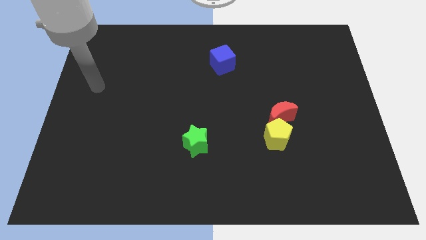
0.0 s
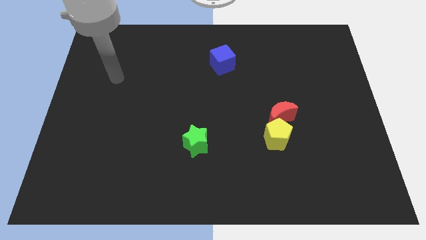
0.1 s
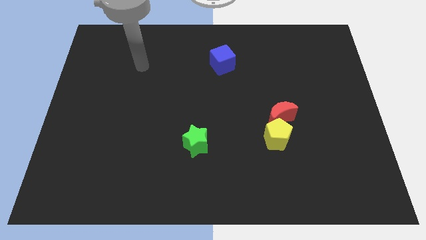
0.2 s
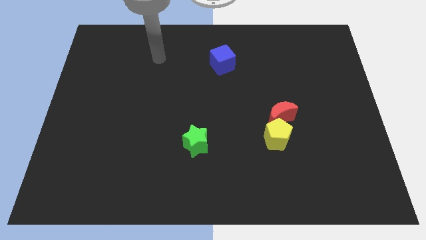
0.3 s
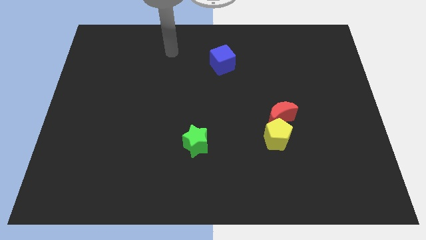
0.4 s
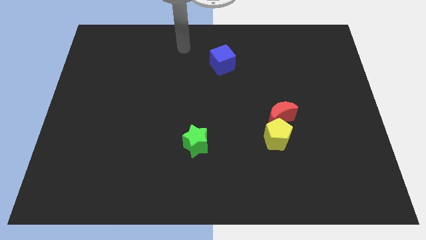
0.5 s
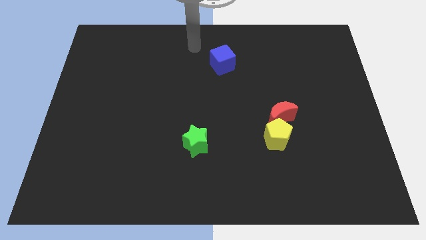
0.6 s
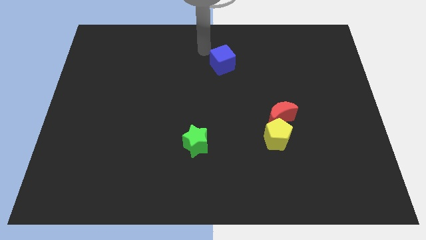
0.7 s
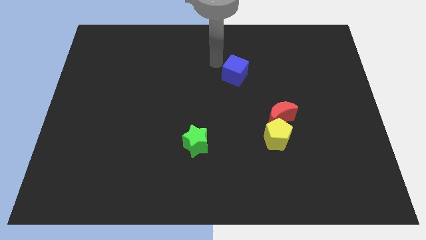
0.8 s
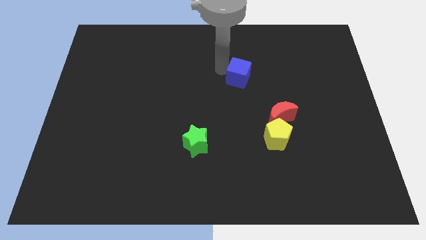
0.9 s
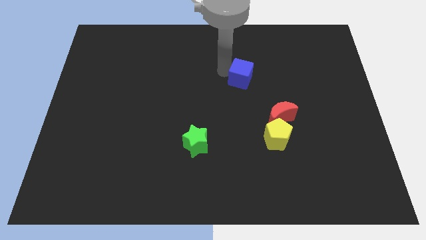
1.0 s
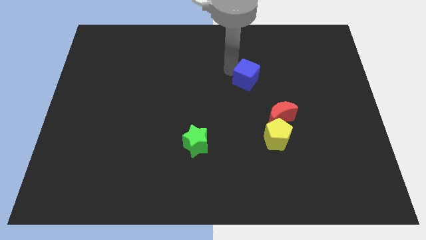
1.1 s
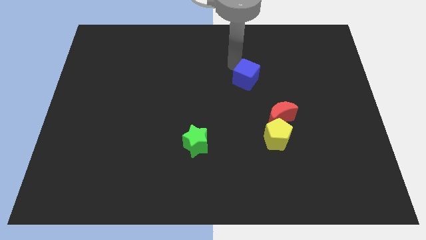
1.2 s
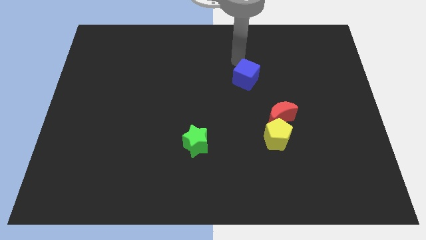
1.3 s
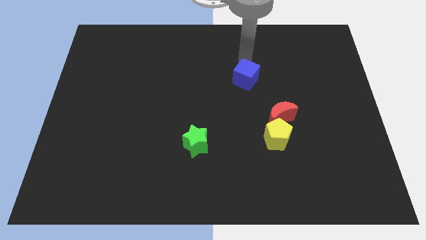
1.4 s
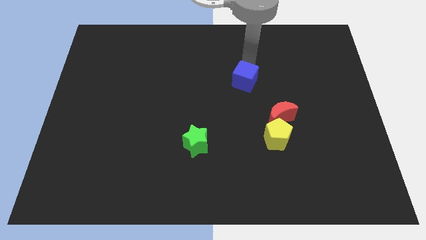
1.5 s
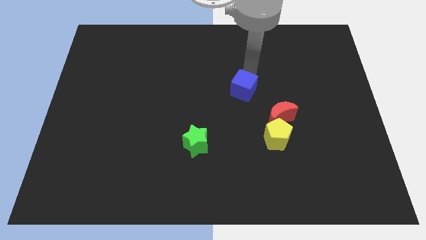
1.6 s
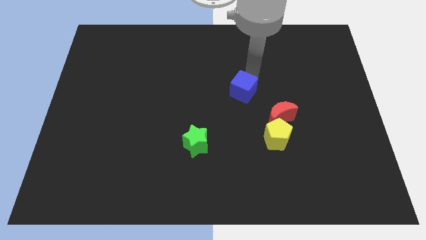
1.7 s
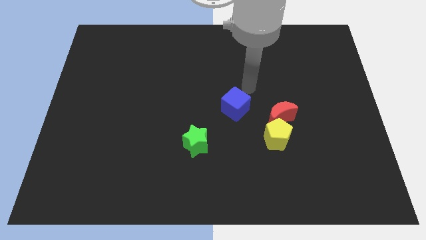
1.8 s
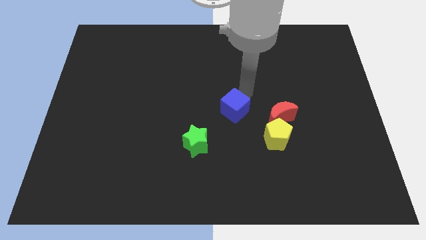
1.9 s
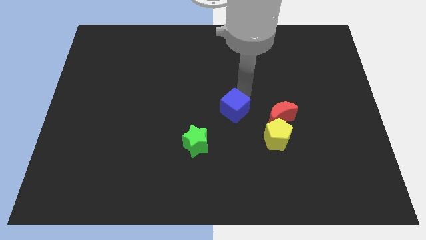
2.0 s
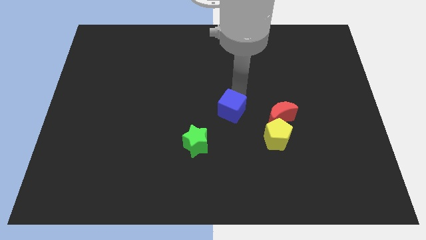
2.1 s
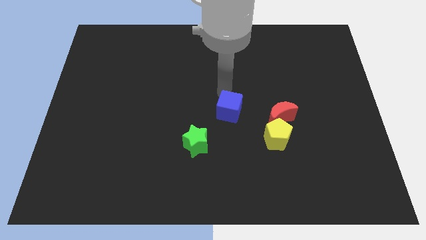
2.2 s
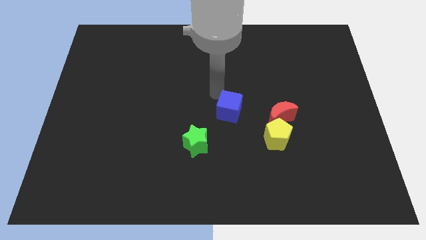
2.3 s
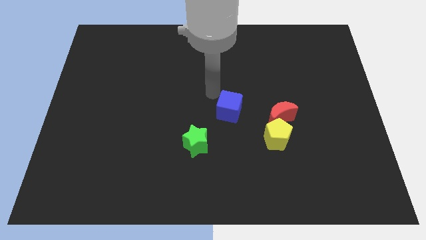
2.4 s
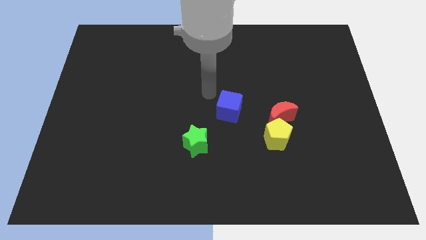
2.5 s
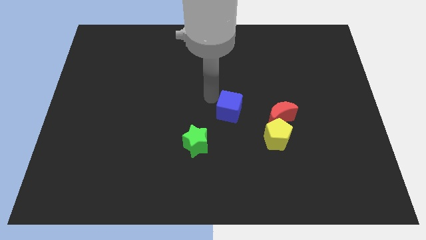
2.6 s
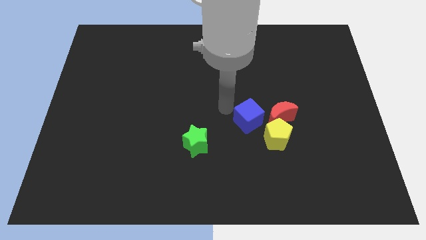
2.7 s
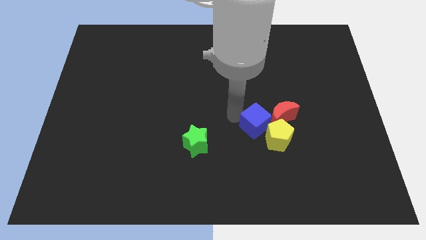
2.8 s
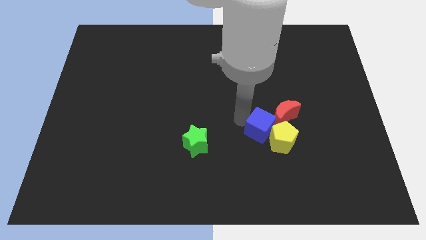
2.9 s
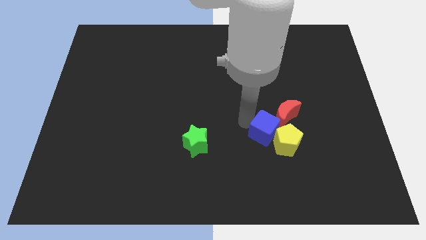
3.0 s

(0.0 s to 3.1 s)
move the blue cube next to the yellow block

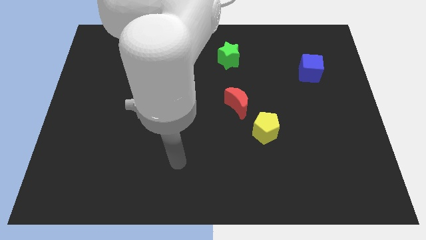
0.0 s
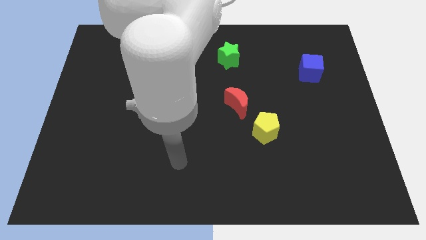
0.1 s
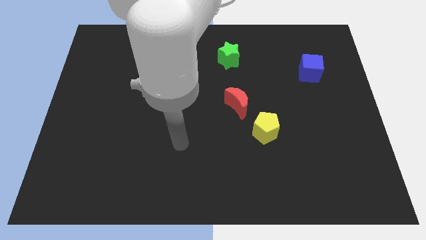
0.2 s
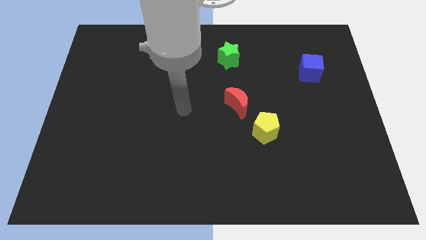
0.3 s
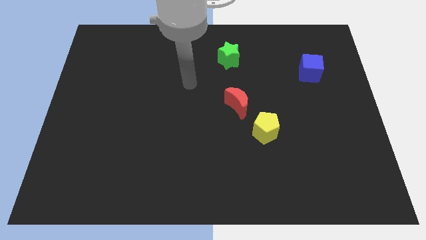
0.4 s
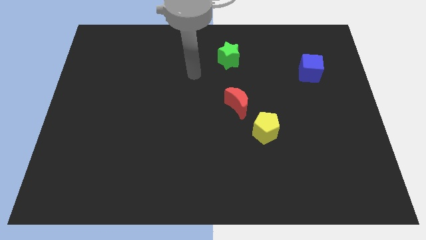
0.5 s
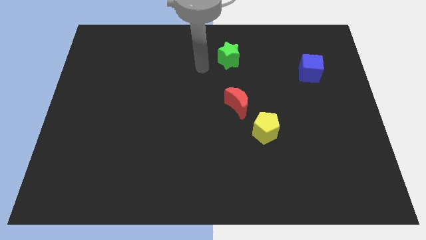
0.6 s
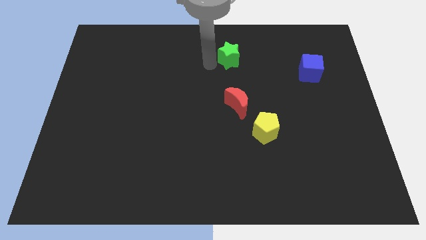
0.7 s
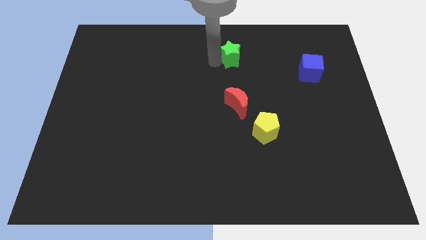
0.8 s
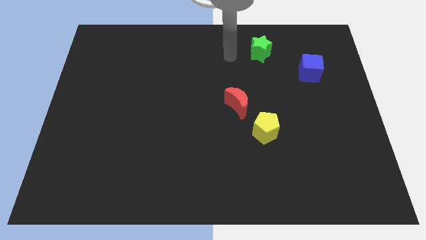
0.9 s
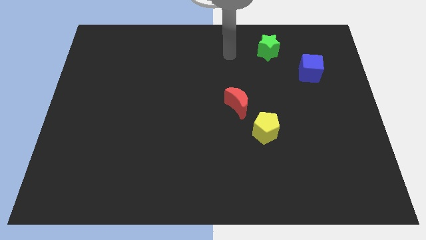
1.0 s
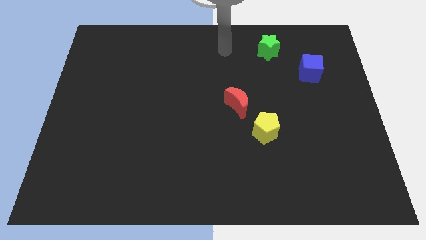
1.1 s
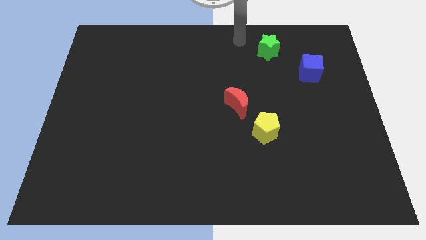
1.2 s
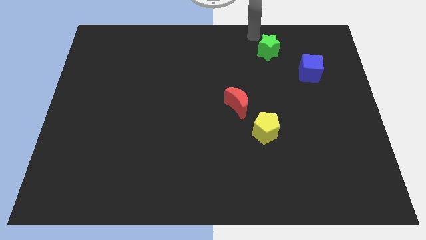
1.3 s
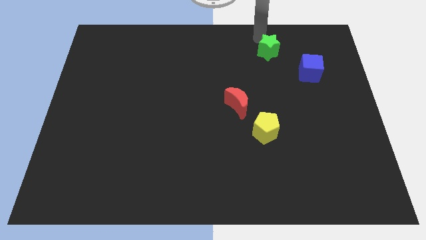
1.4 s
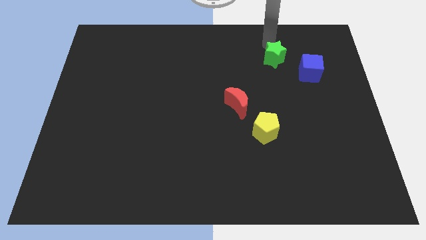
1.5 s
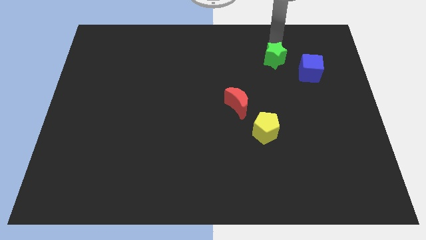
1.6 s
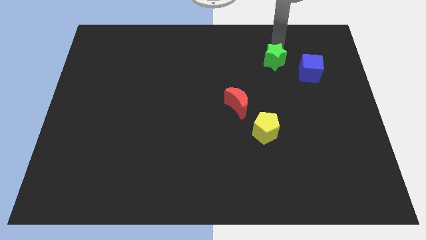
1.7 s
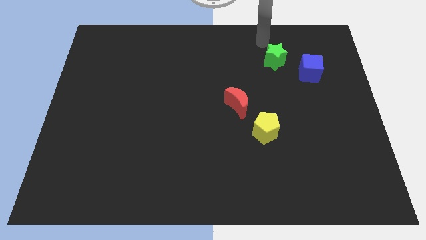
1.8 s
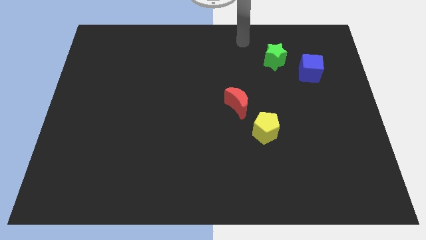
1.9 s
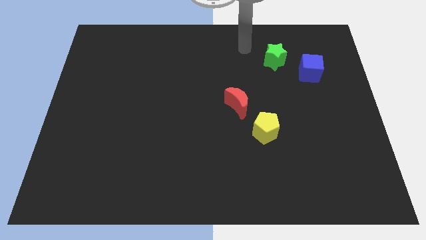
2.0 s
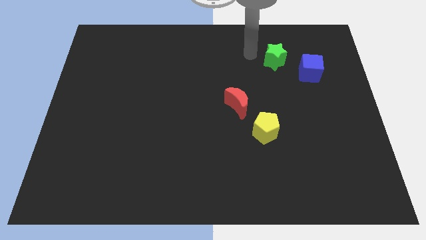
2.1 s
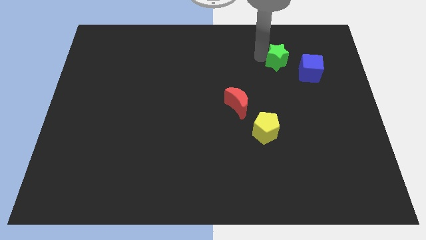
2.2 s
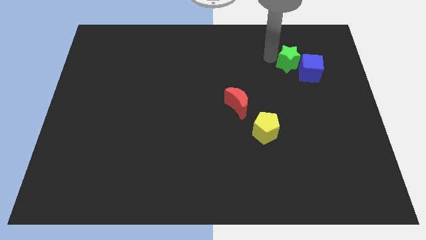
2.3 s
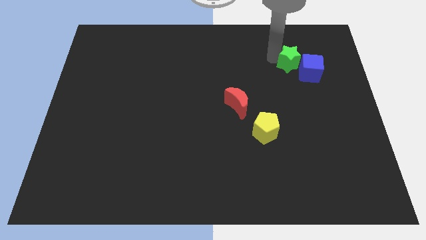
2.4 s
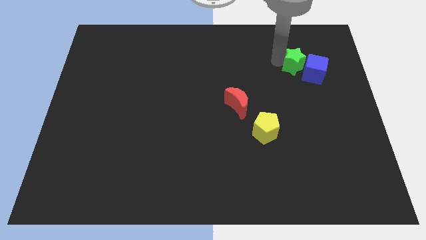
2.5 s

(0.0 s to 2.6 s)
move the green star to the blue block

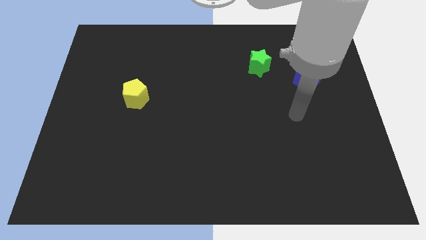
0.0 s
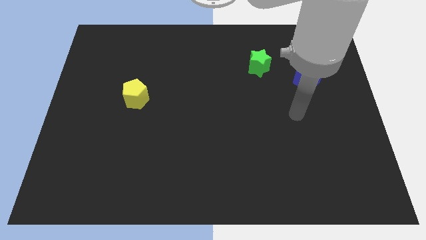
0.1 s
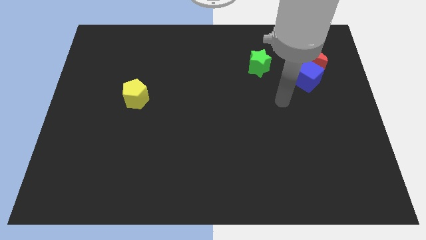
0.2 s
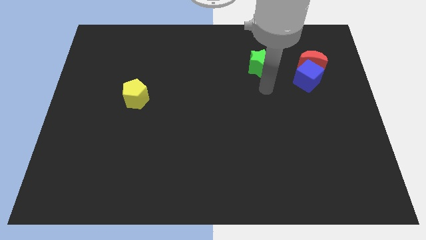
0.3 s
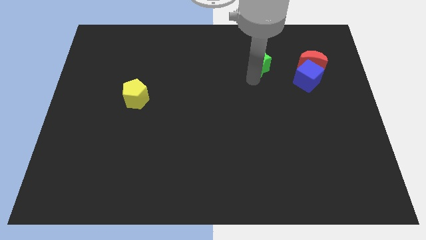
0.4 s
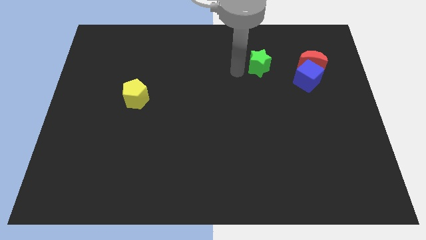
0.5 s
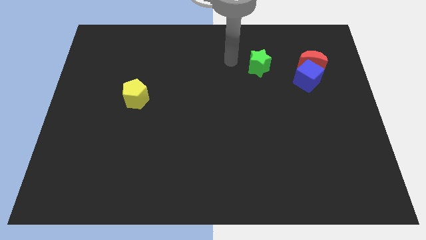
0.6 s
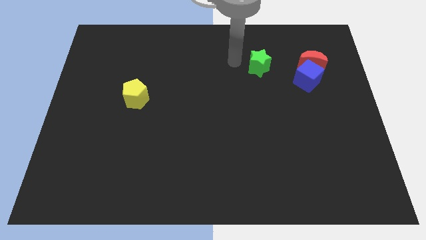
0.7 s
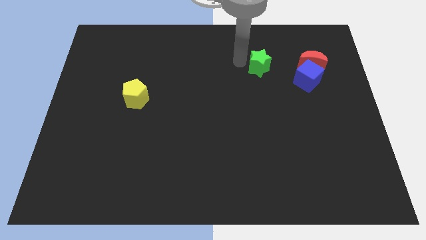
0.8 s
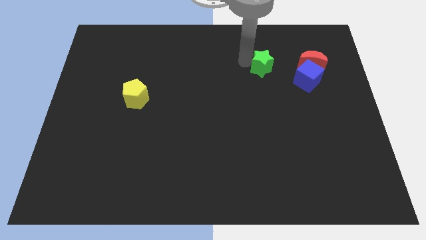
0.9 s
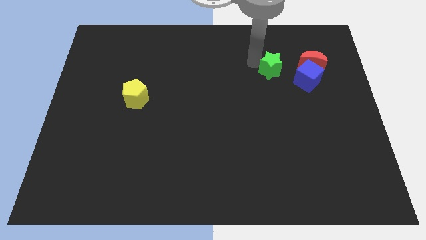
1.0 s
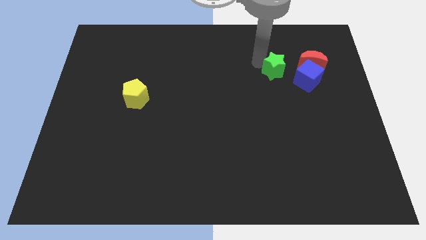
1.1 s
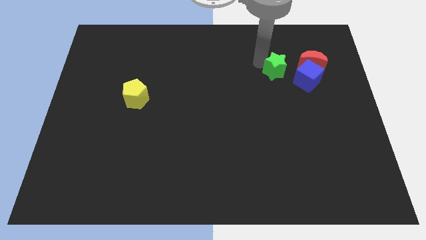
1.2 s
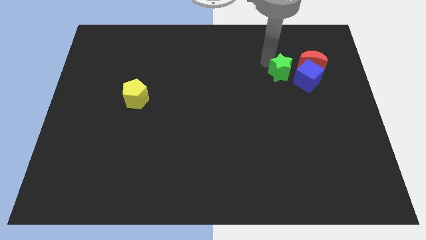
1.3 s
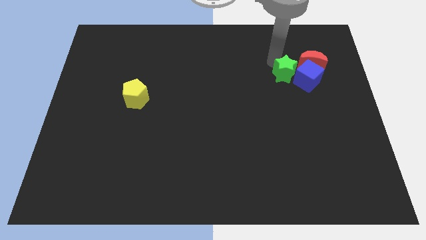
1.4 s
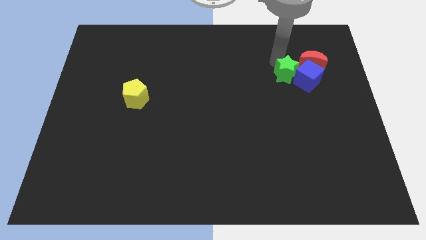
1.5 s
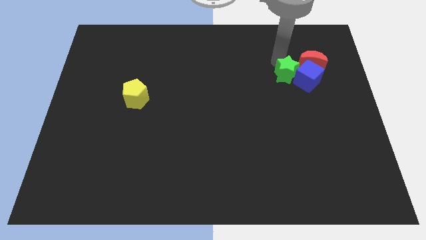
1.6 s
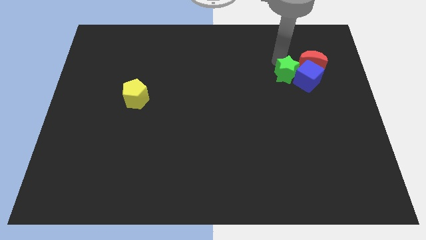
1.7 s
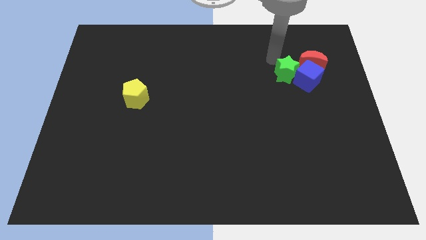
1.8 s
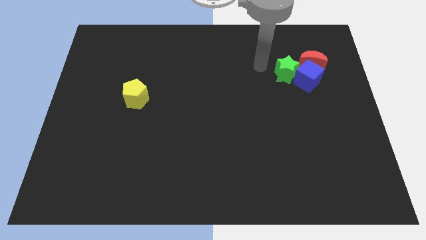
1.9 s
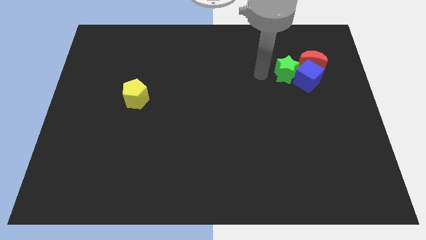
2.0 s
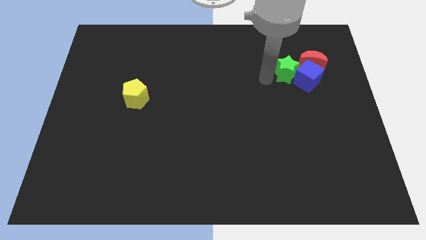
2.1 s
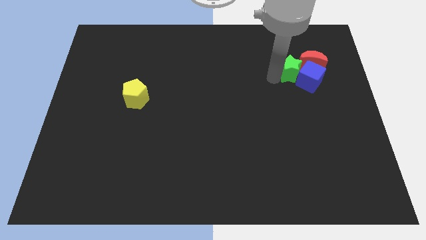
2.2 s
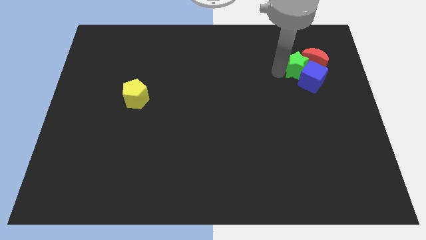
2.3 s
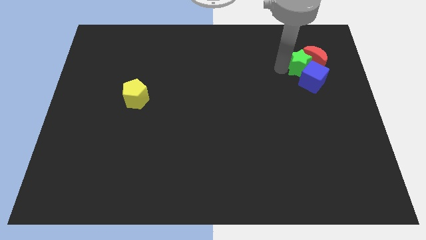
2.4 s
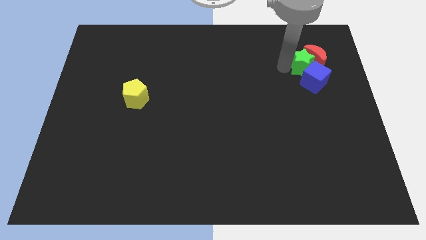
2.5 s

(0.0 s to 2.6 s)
push the green block towards the red block
